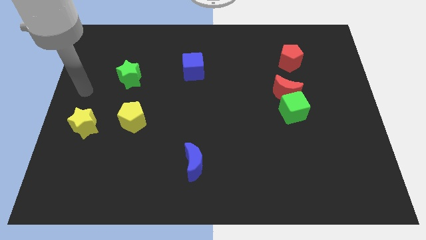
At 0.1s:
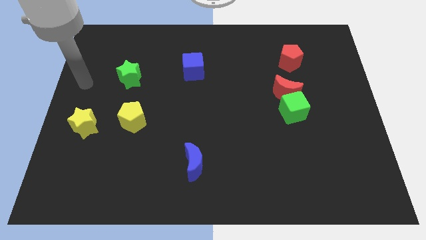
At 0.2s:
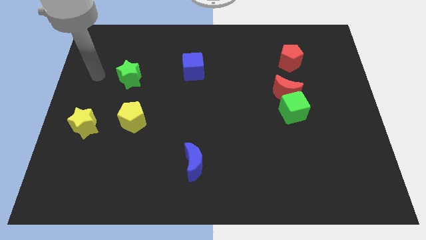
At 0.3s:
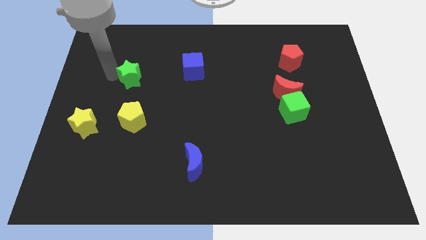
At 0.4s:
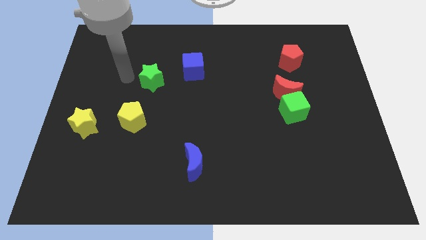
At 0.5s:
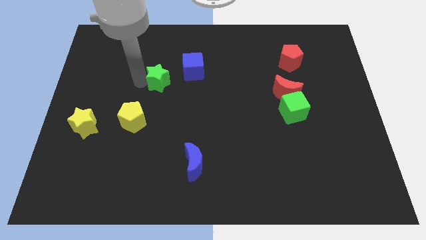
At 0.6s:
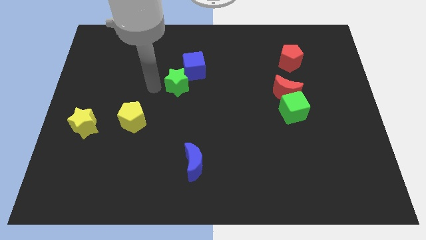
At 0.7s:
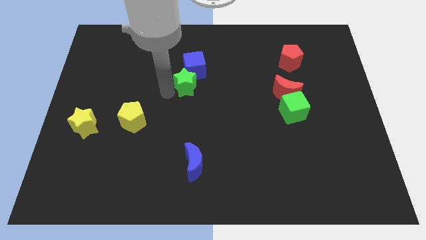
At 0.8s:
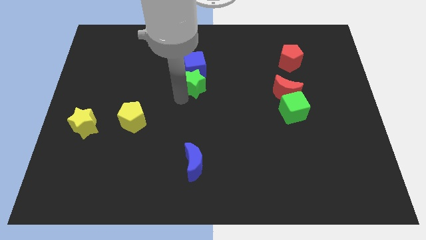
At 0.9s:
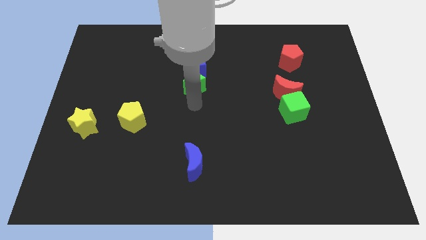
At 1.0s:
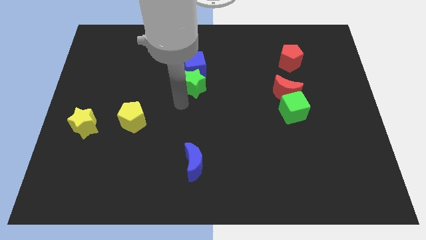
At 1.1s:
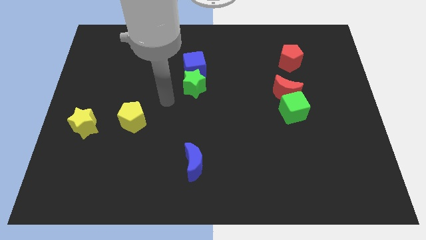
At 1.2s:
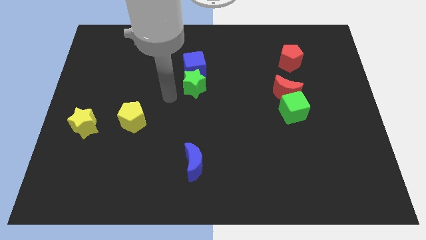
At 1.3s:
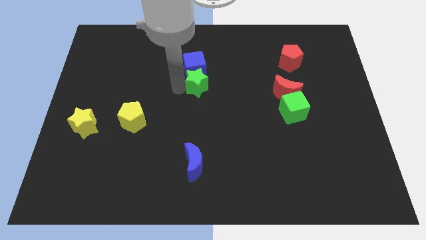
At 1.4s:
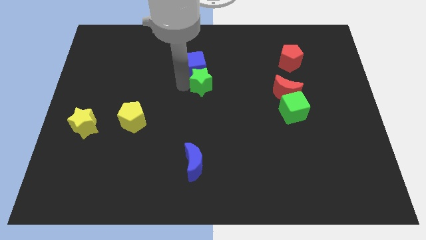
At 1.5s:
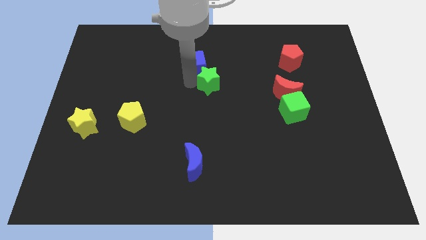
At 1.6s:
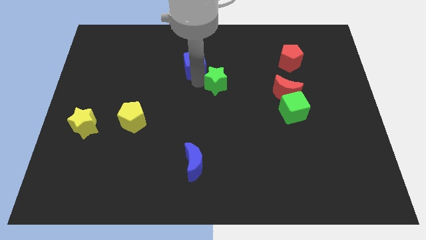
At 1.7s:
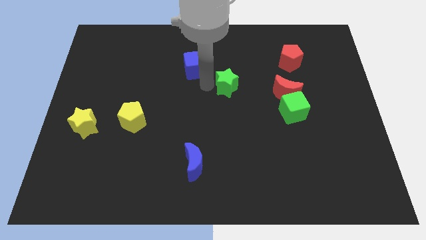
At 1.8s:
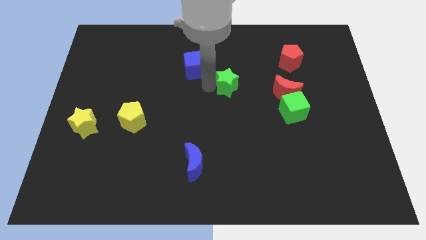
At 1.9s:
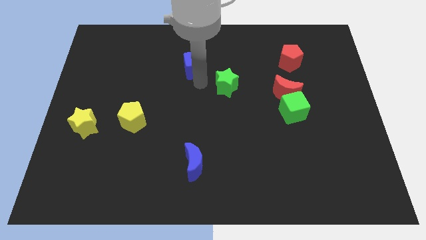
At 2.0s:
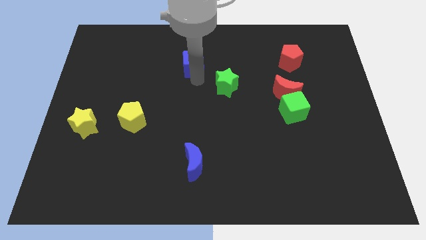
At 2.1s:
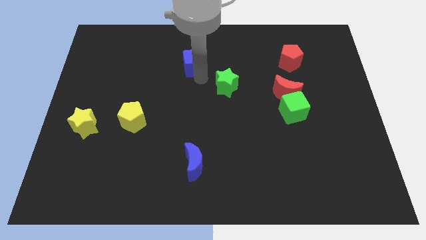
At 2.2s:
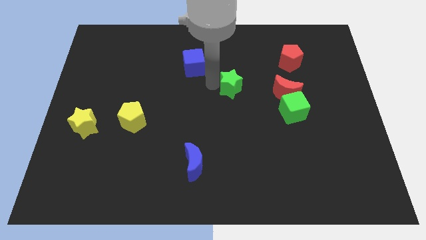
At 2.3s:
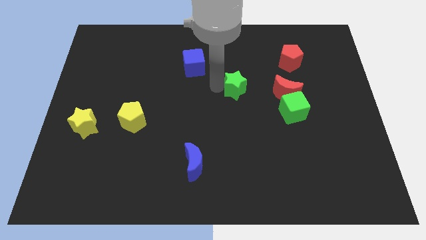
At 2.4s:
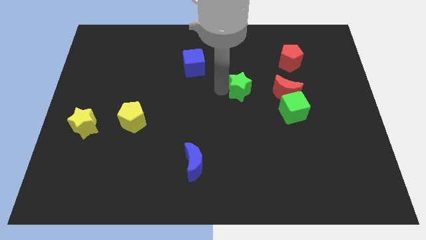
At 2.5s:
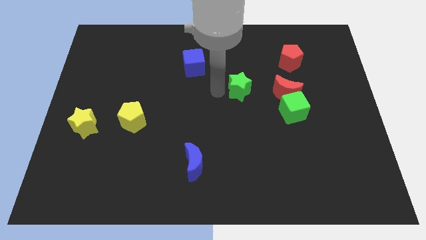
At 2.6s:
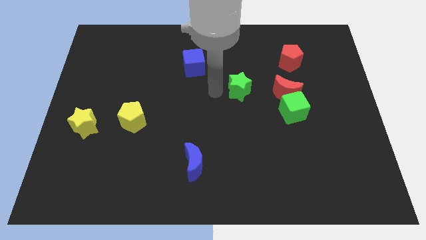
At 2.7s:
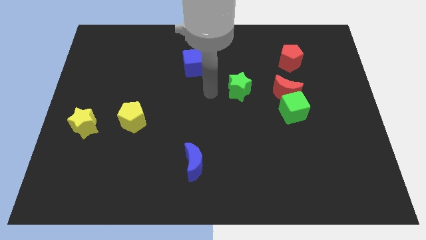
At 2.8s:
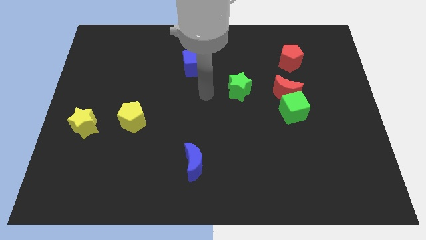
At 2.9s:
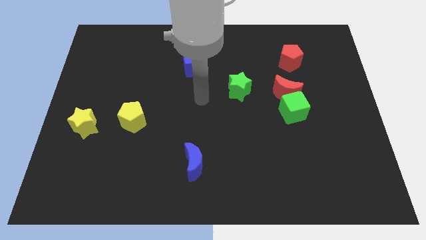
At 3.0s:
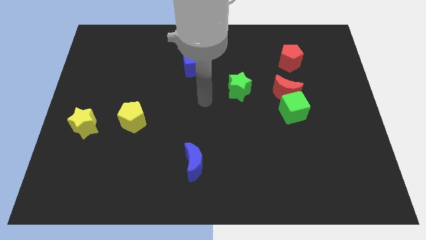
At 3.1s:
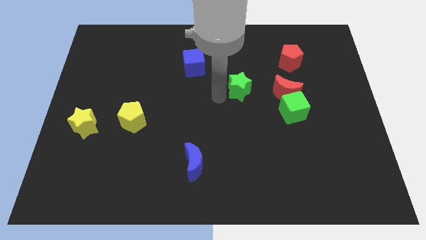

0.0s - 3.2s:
push the green star to the center

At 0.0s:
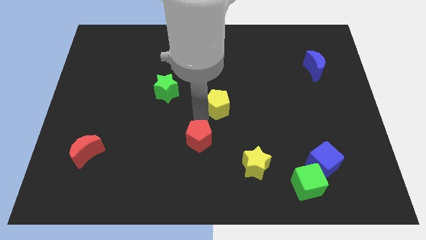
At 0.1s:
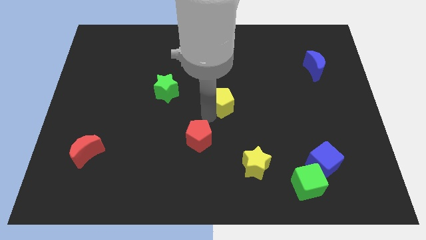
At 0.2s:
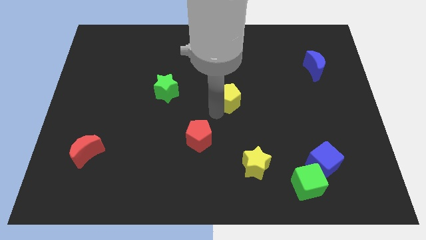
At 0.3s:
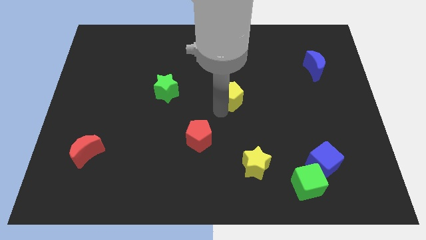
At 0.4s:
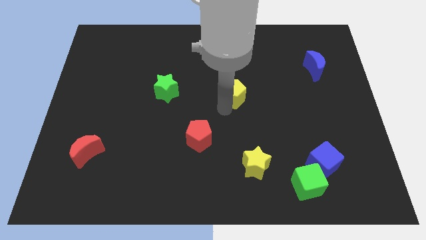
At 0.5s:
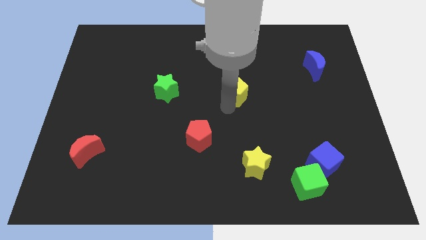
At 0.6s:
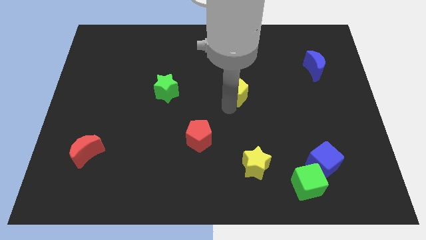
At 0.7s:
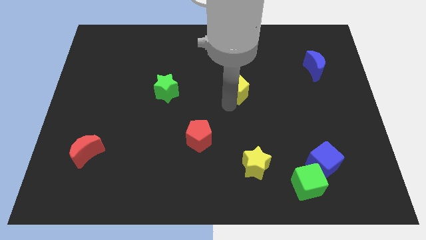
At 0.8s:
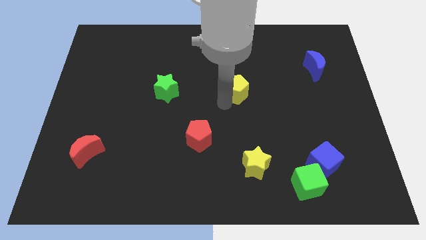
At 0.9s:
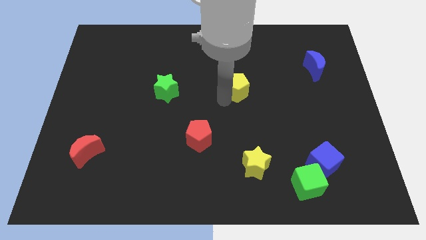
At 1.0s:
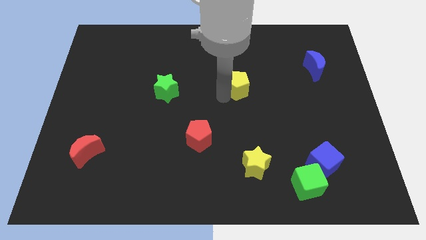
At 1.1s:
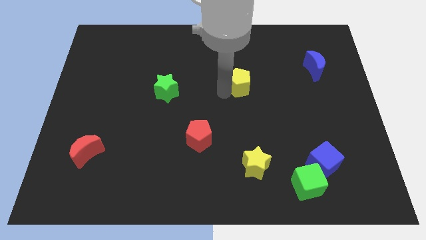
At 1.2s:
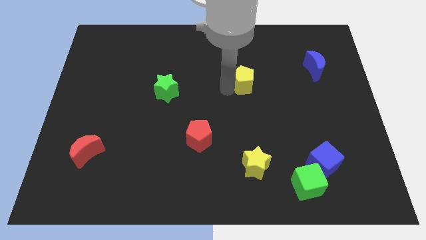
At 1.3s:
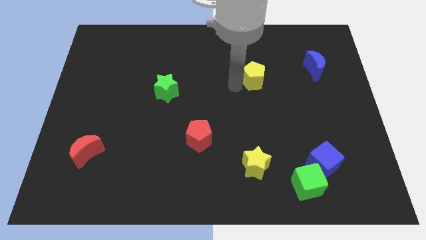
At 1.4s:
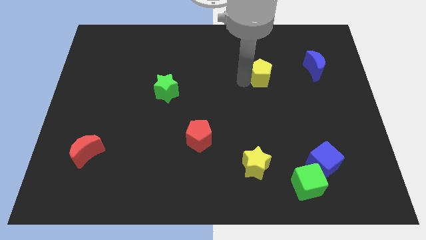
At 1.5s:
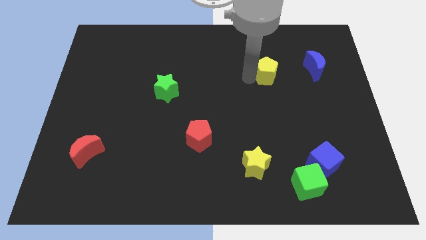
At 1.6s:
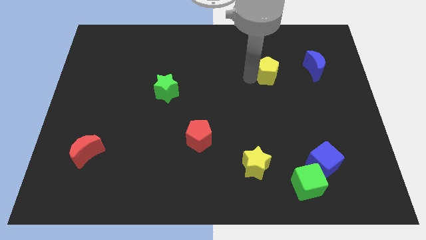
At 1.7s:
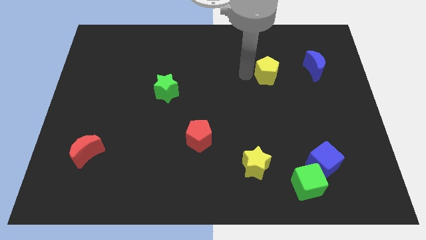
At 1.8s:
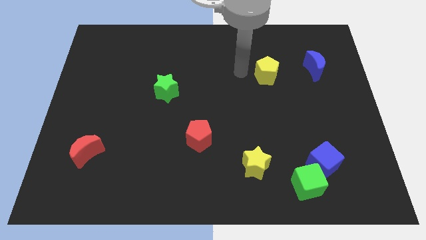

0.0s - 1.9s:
push the yellow pentagon above the yellow star

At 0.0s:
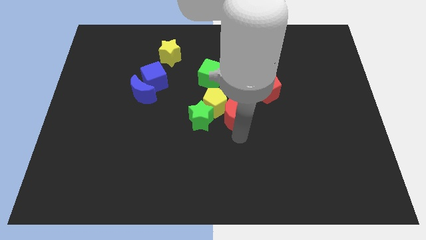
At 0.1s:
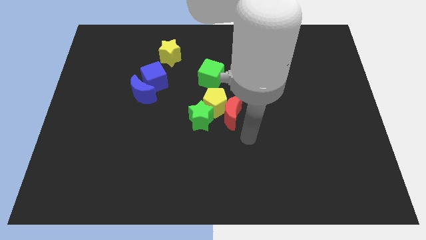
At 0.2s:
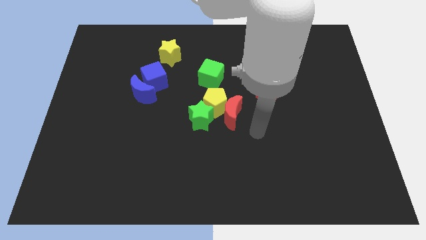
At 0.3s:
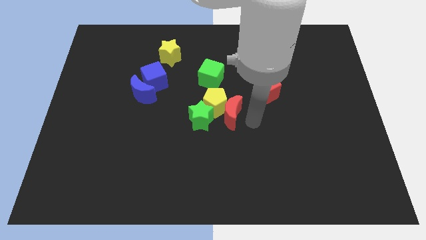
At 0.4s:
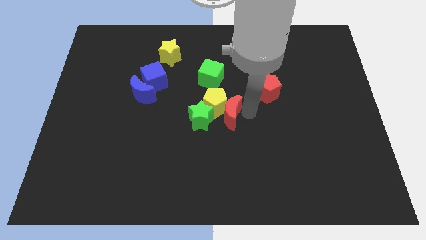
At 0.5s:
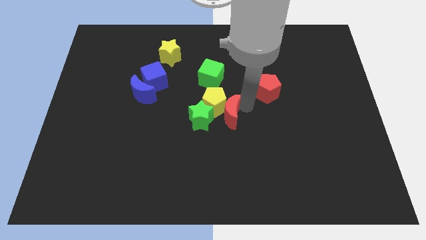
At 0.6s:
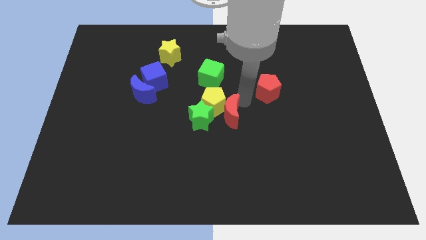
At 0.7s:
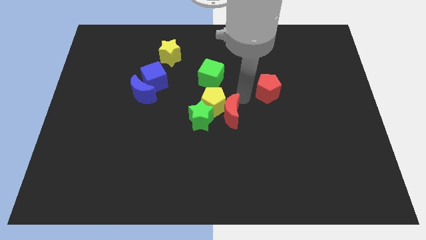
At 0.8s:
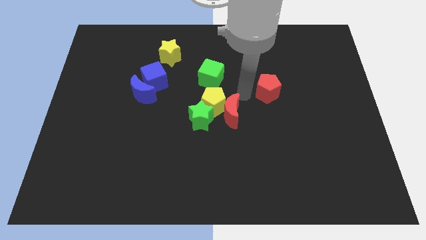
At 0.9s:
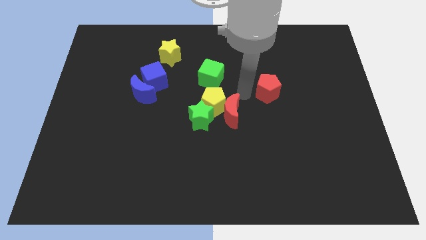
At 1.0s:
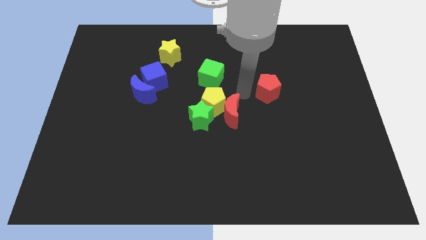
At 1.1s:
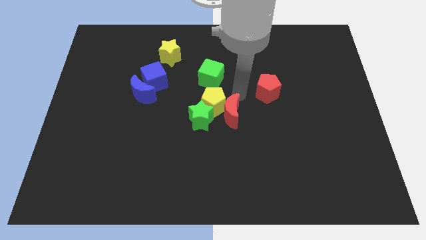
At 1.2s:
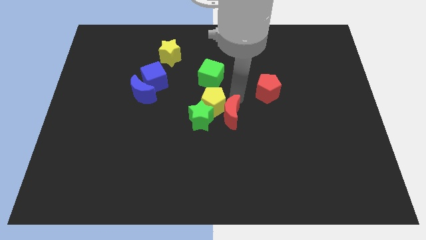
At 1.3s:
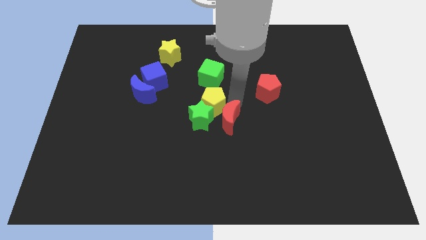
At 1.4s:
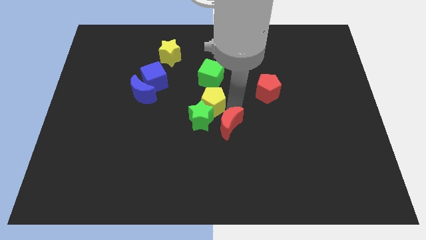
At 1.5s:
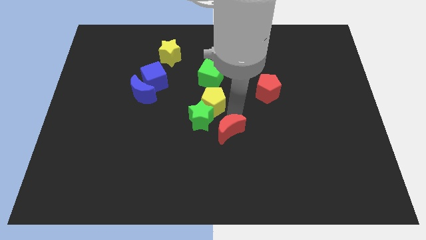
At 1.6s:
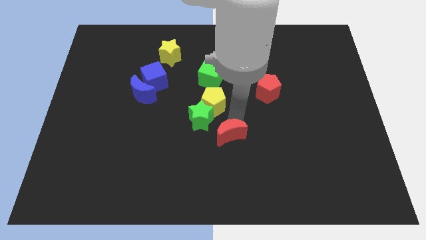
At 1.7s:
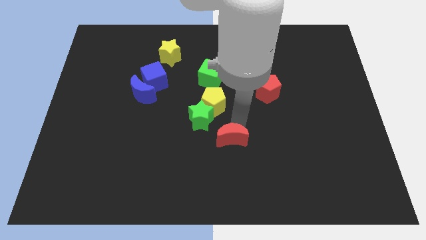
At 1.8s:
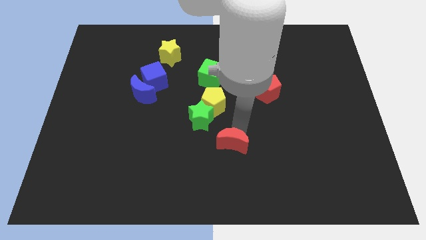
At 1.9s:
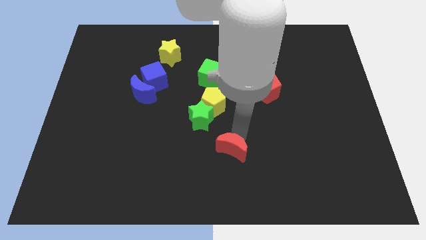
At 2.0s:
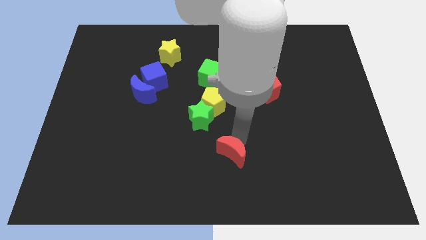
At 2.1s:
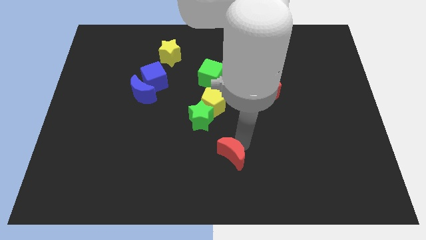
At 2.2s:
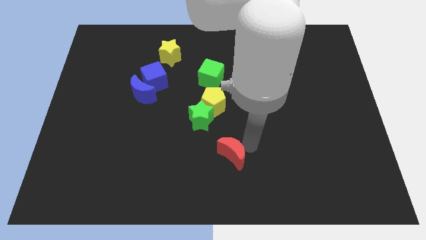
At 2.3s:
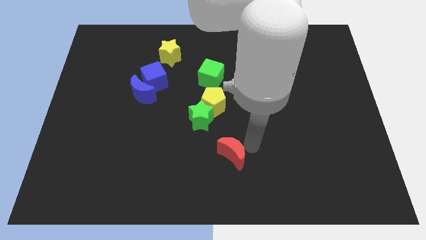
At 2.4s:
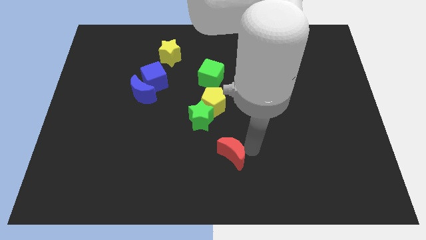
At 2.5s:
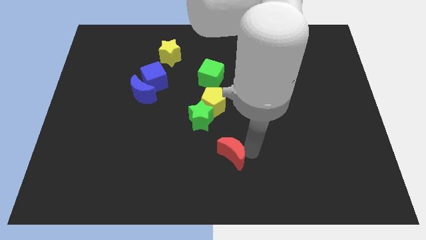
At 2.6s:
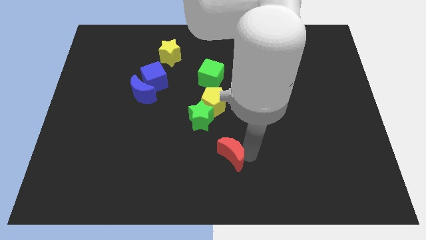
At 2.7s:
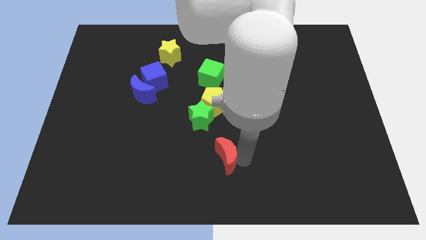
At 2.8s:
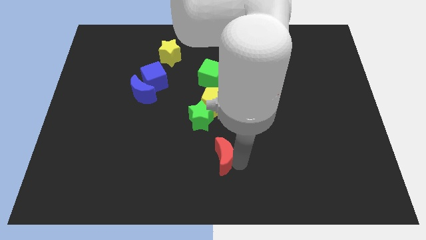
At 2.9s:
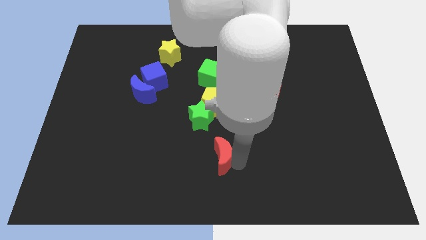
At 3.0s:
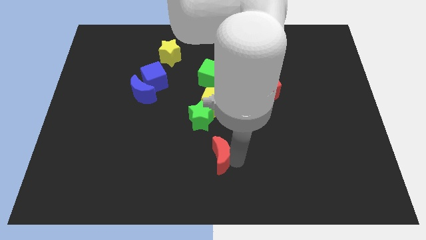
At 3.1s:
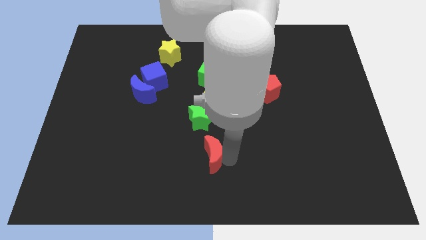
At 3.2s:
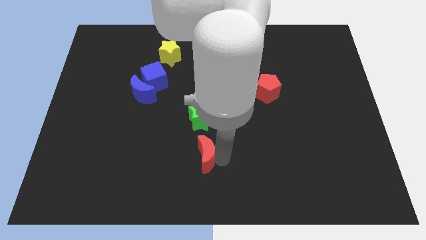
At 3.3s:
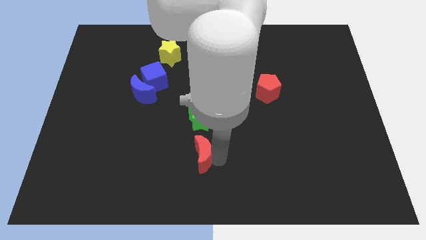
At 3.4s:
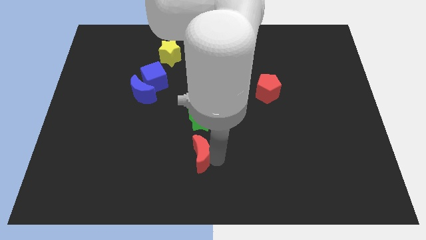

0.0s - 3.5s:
place the red moon at the bottom of the green star

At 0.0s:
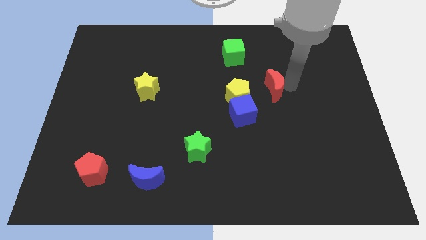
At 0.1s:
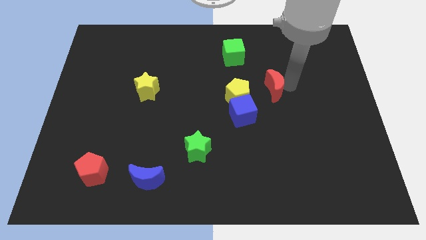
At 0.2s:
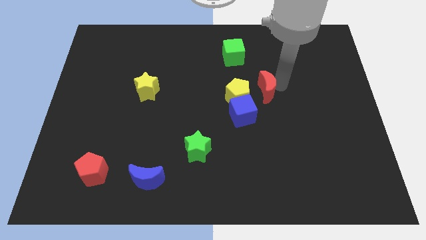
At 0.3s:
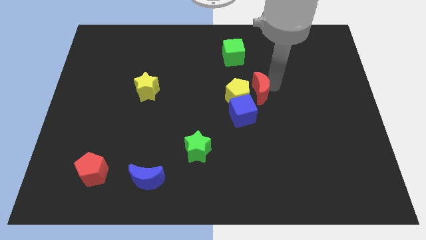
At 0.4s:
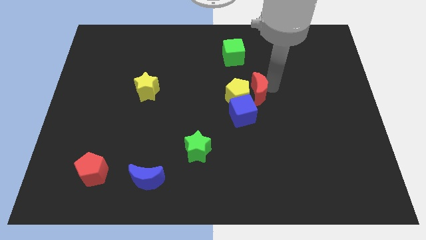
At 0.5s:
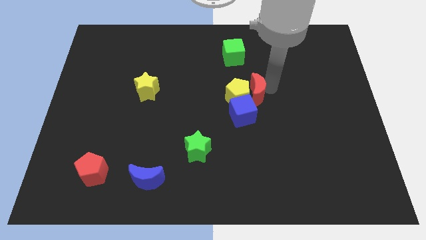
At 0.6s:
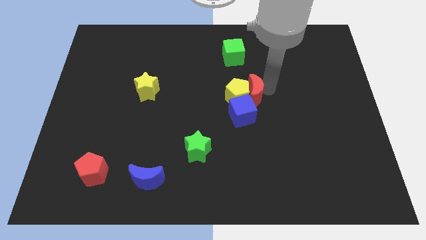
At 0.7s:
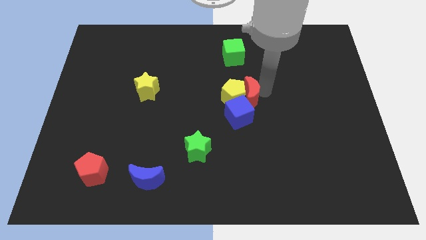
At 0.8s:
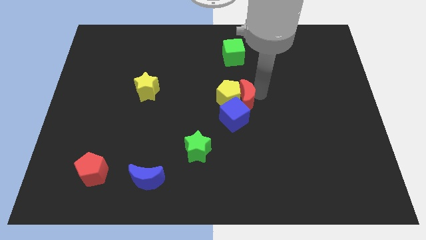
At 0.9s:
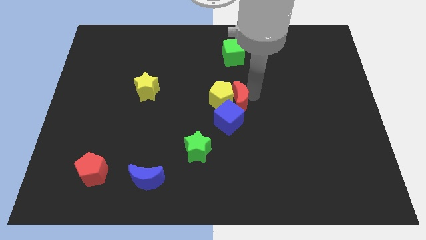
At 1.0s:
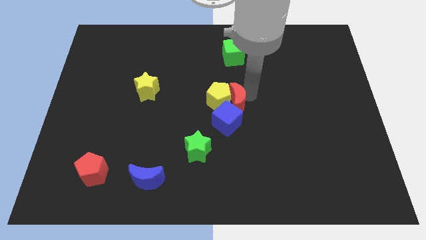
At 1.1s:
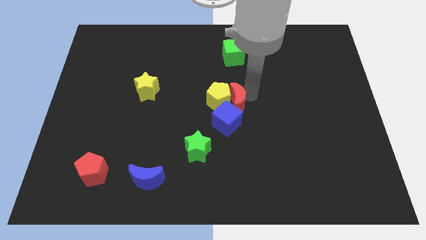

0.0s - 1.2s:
push the red moon into the yellow pentagon
